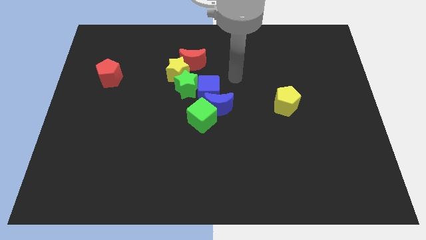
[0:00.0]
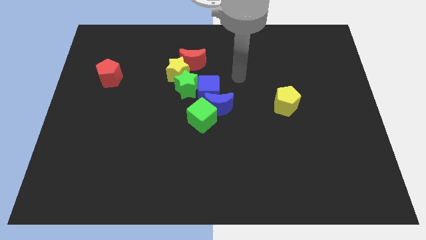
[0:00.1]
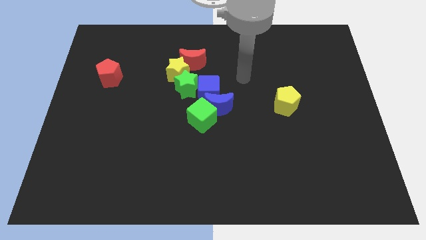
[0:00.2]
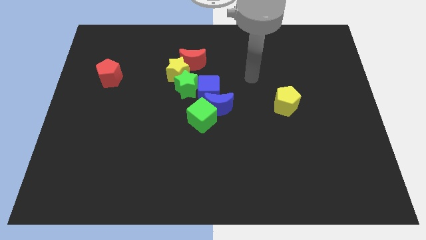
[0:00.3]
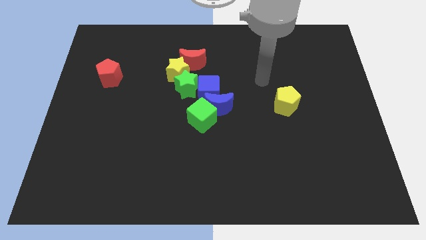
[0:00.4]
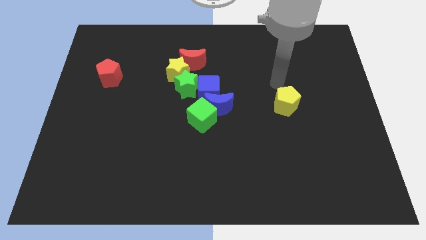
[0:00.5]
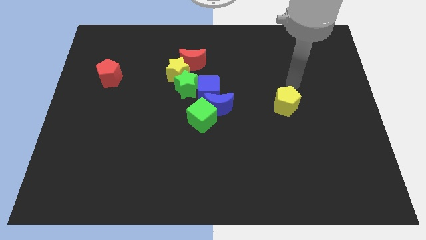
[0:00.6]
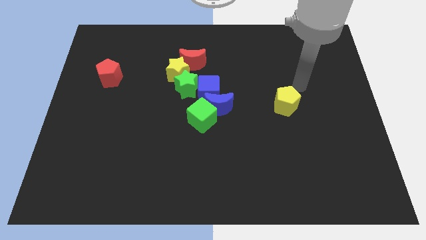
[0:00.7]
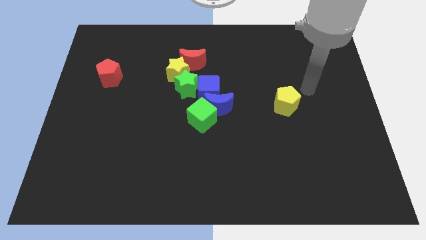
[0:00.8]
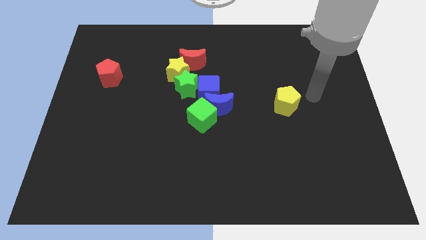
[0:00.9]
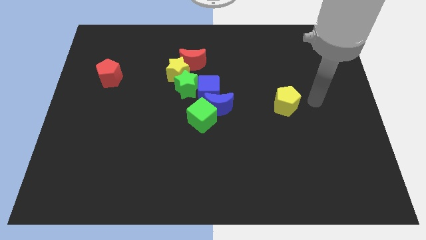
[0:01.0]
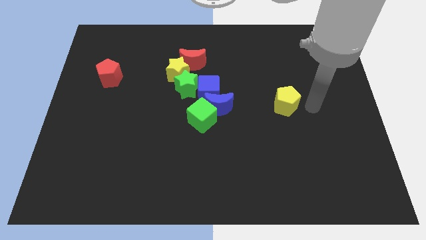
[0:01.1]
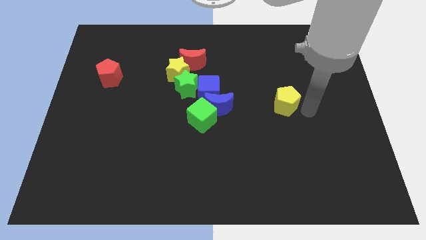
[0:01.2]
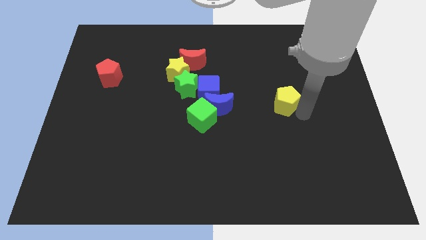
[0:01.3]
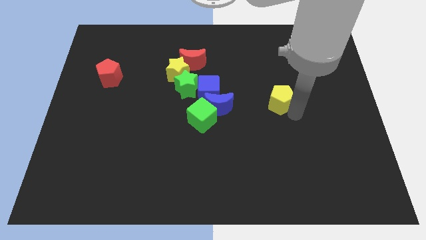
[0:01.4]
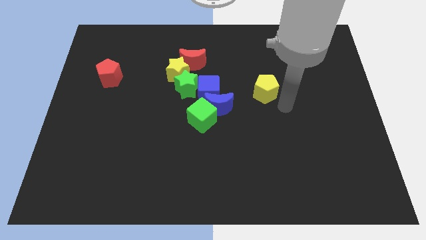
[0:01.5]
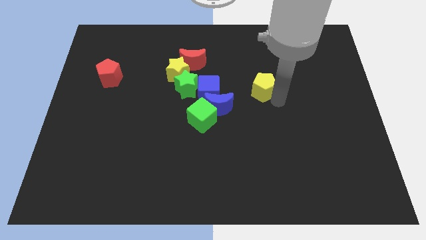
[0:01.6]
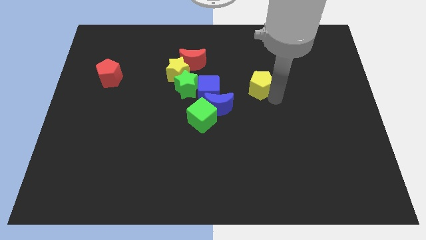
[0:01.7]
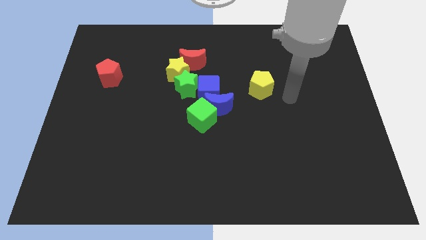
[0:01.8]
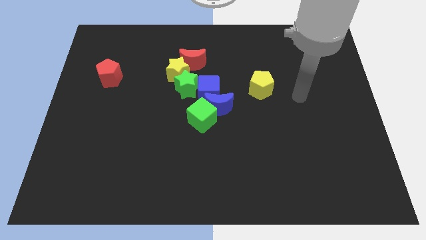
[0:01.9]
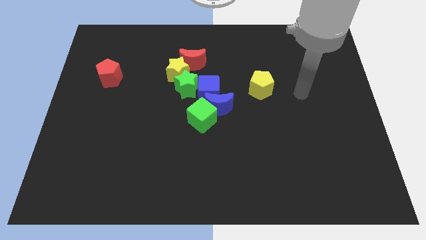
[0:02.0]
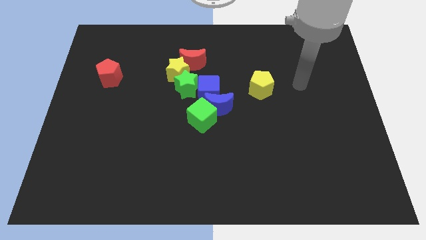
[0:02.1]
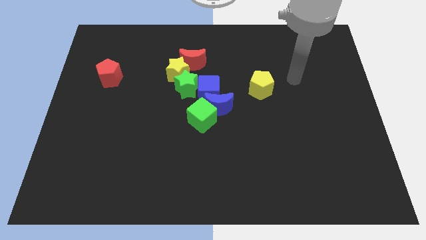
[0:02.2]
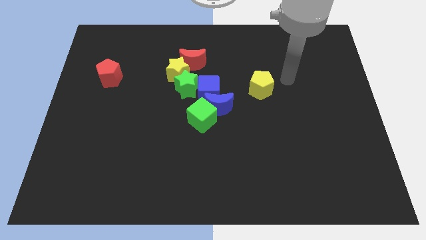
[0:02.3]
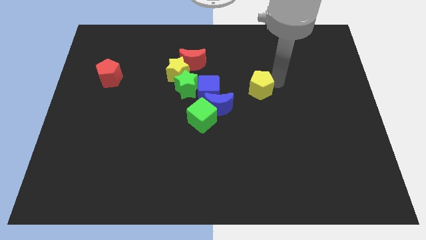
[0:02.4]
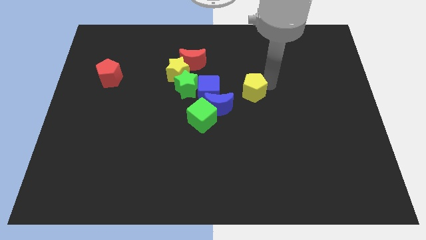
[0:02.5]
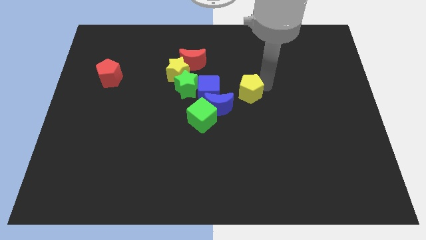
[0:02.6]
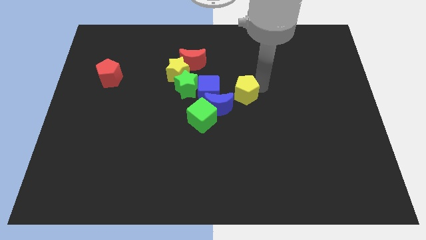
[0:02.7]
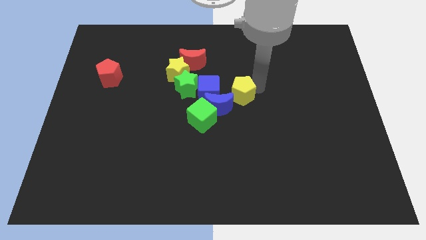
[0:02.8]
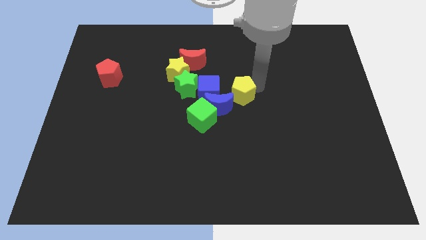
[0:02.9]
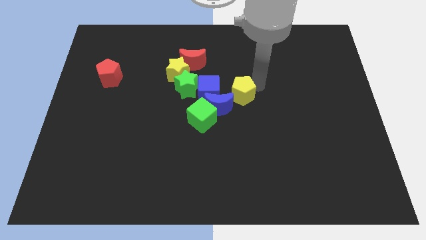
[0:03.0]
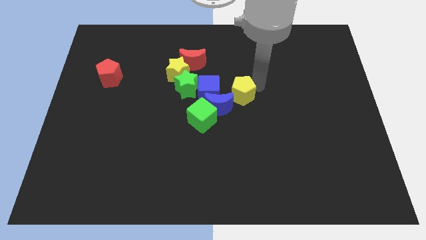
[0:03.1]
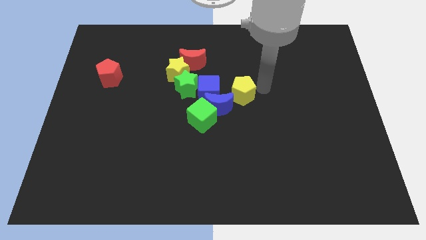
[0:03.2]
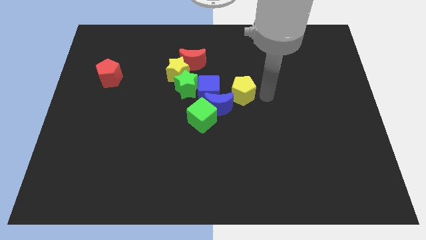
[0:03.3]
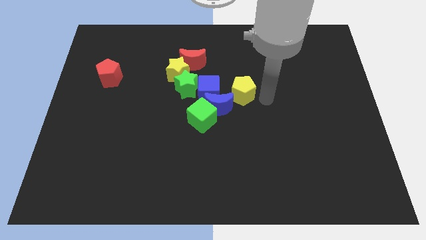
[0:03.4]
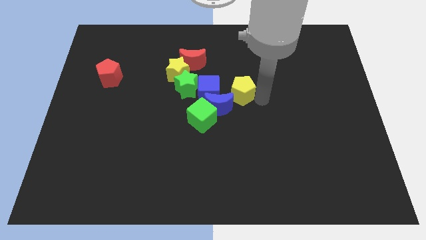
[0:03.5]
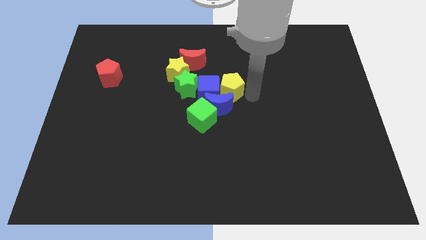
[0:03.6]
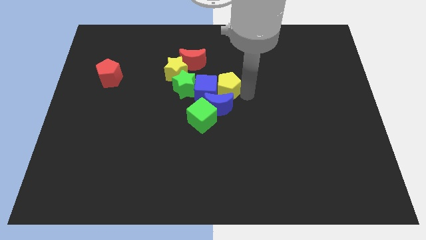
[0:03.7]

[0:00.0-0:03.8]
push the yellow pentagon into the blue cube

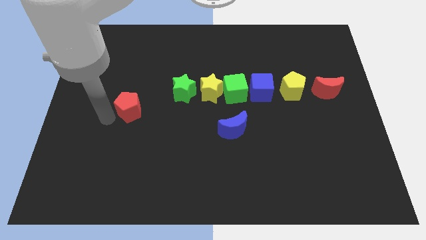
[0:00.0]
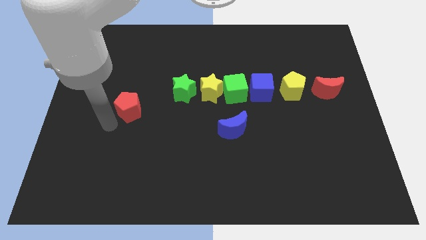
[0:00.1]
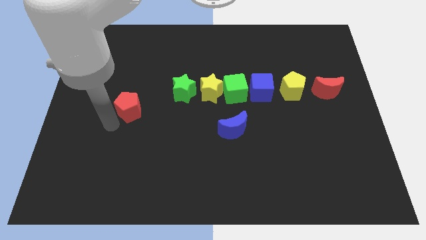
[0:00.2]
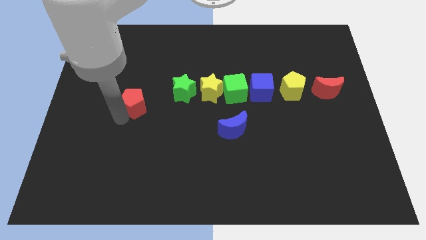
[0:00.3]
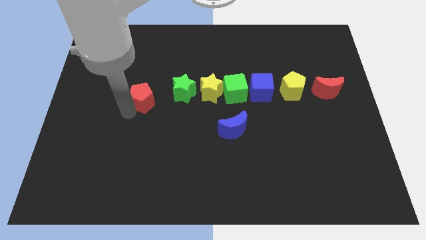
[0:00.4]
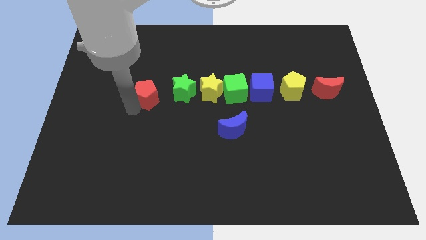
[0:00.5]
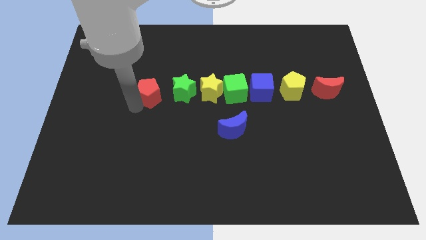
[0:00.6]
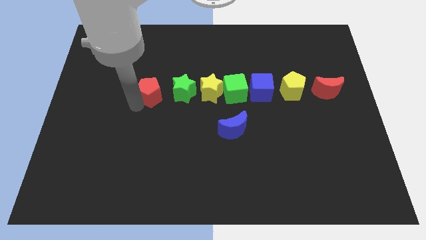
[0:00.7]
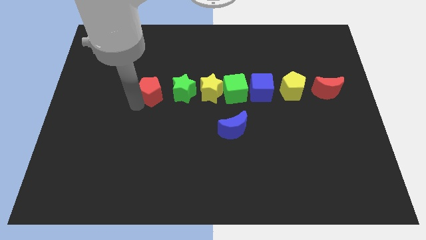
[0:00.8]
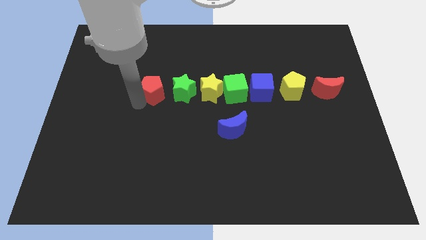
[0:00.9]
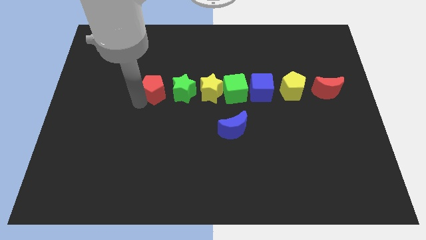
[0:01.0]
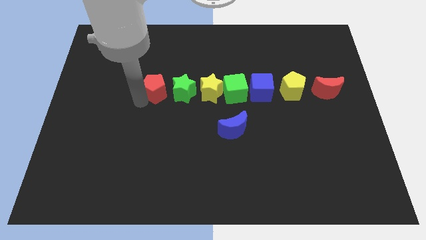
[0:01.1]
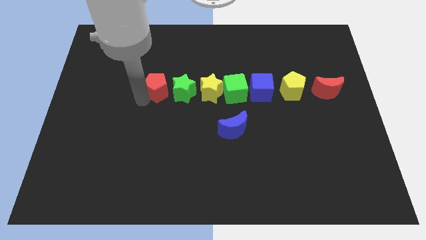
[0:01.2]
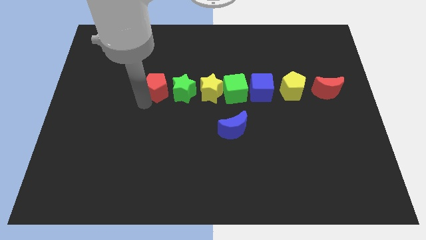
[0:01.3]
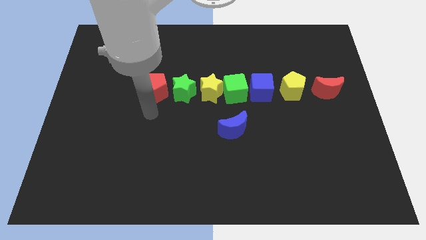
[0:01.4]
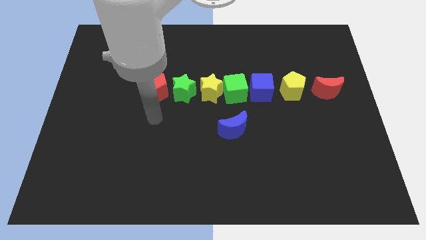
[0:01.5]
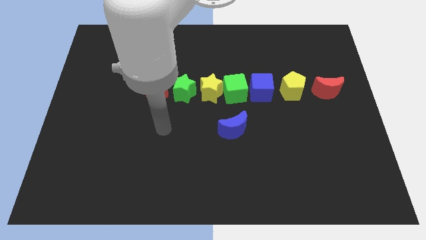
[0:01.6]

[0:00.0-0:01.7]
put the red pentagon to the left side of the green star

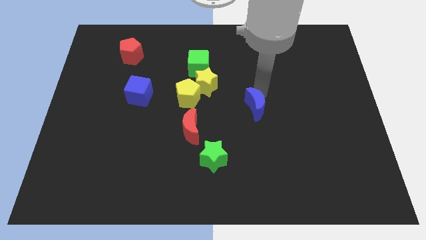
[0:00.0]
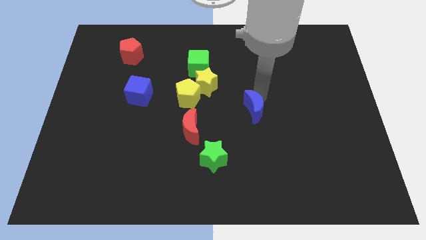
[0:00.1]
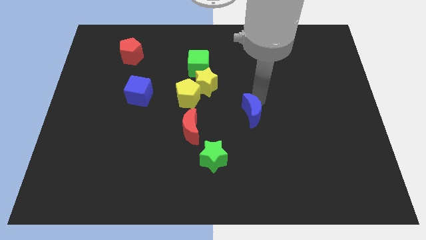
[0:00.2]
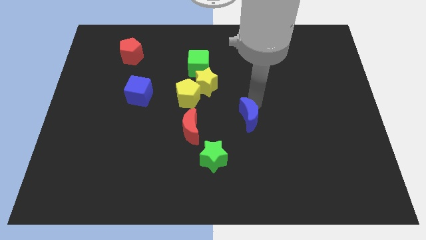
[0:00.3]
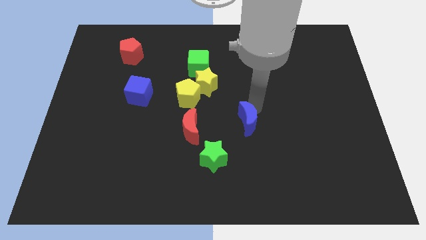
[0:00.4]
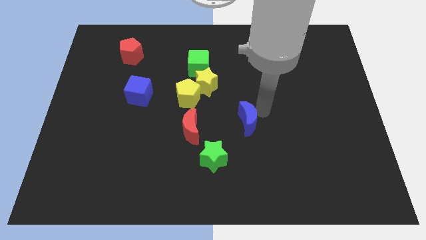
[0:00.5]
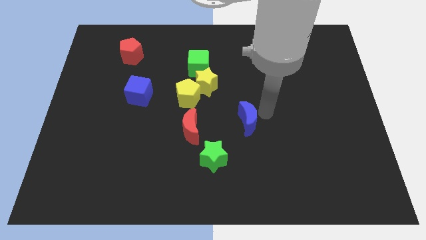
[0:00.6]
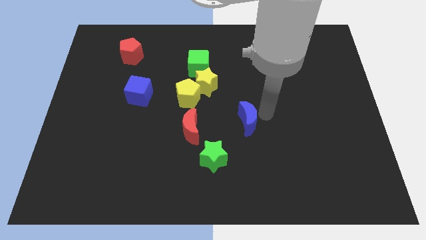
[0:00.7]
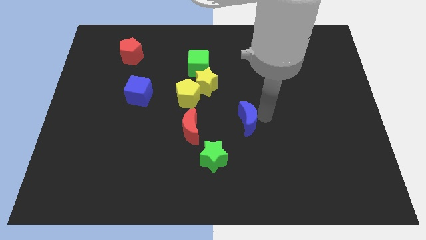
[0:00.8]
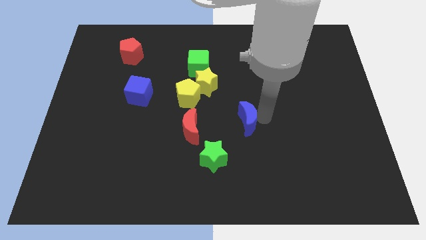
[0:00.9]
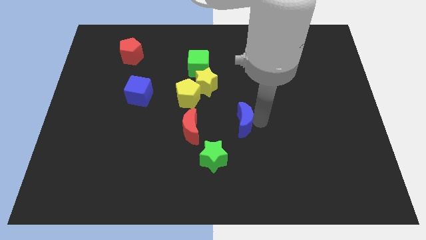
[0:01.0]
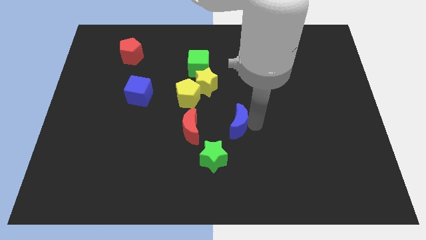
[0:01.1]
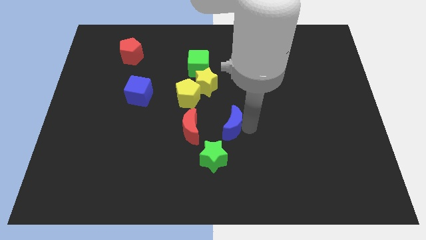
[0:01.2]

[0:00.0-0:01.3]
place the blue moon to the right of the red moon

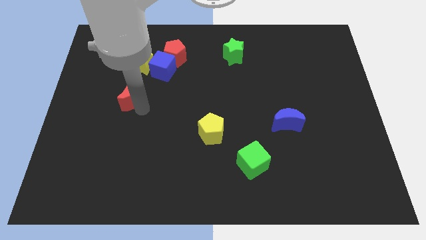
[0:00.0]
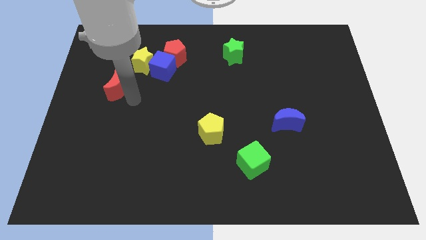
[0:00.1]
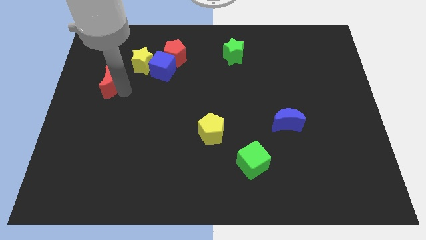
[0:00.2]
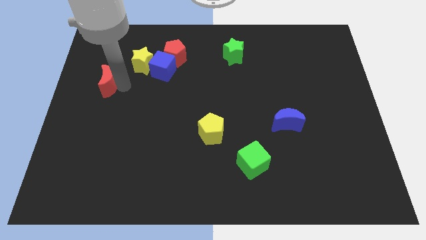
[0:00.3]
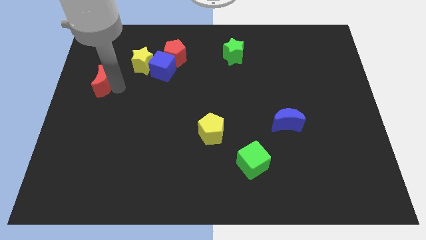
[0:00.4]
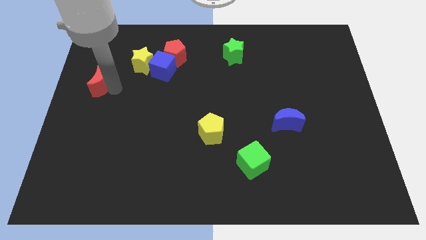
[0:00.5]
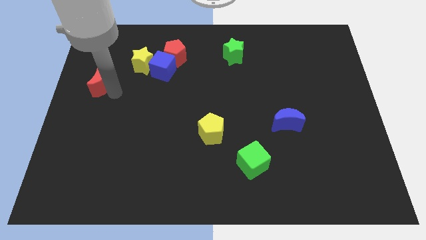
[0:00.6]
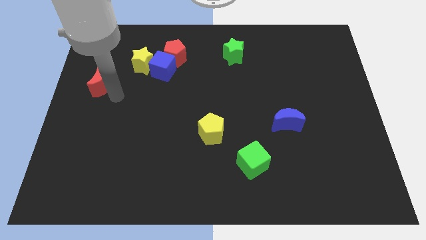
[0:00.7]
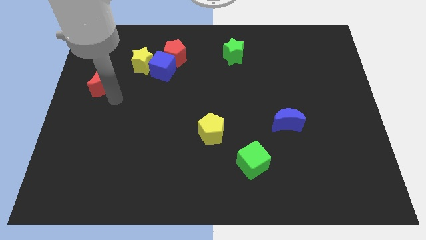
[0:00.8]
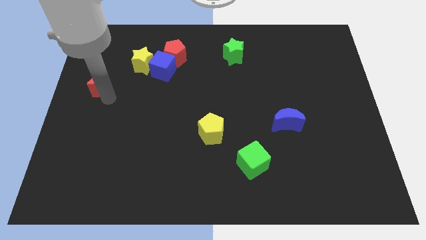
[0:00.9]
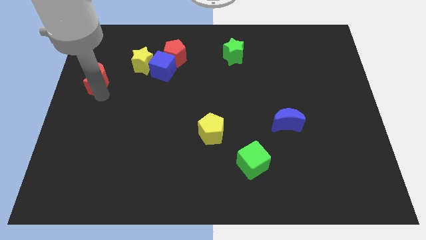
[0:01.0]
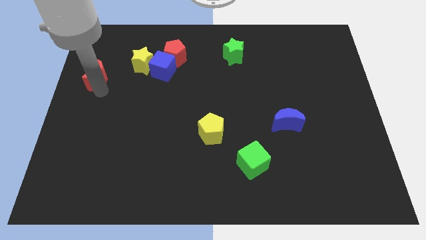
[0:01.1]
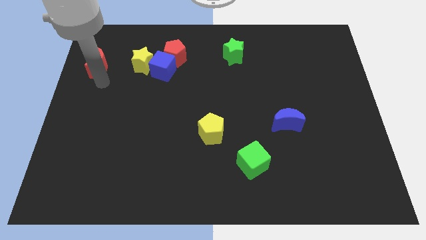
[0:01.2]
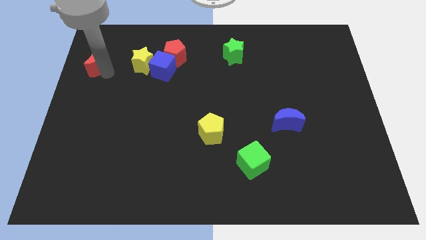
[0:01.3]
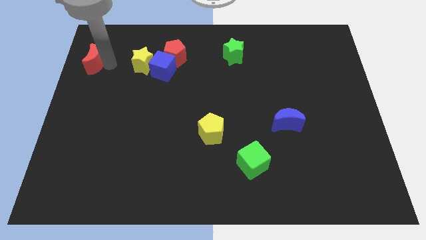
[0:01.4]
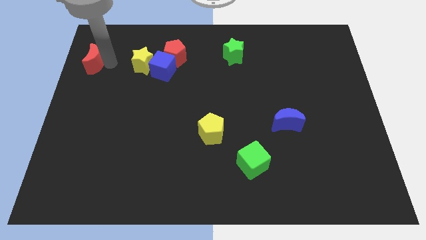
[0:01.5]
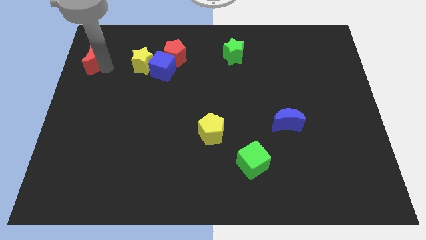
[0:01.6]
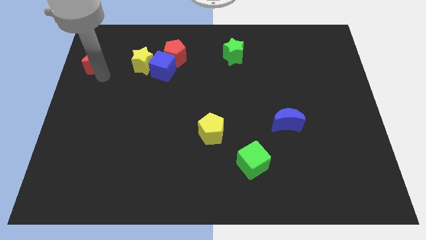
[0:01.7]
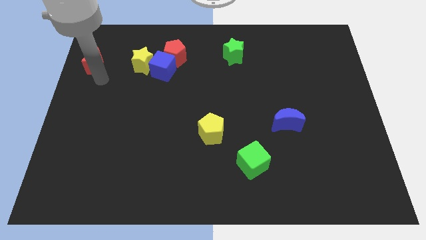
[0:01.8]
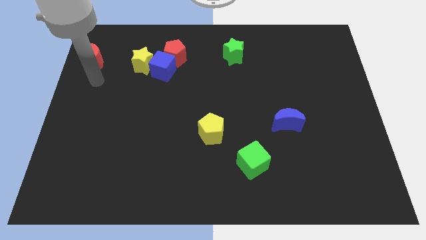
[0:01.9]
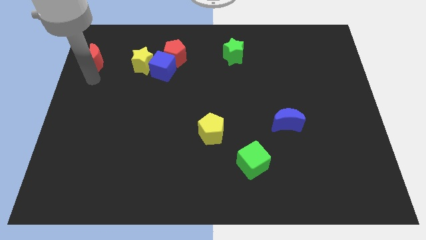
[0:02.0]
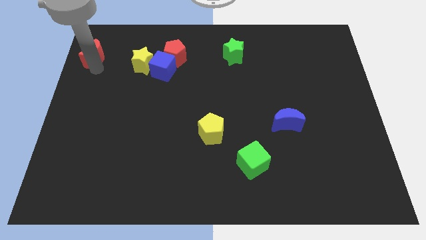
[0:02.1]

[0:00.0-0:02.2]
place the red crescent at the top left corner
